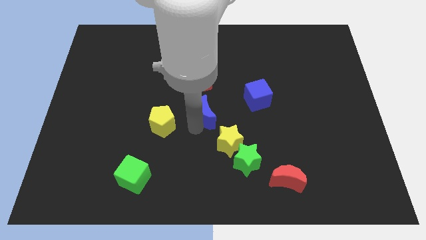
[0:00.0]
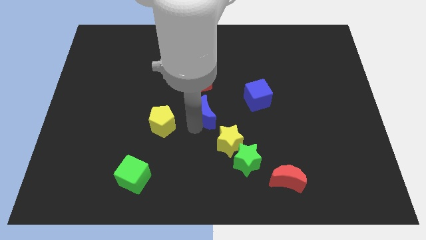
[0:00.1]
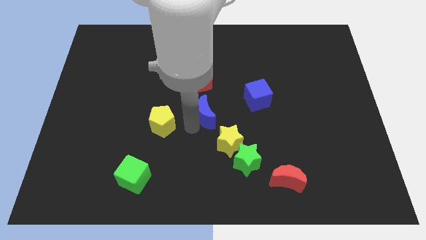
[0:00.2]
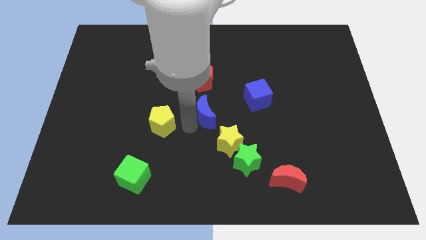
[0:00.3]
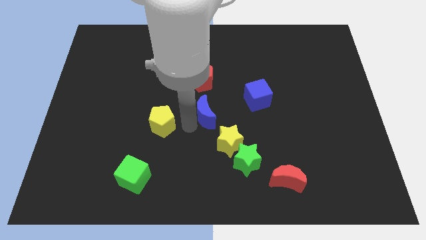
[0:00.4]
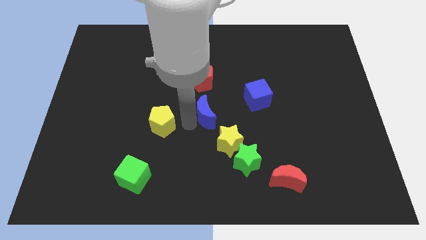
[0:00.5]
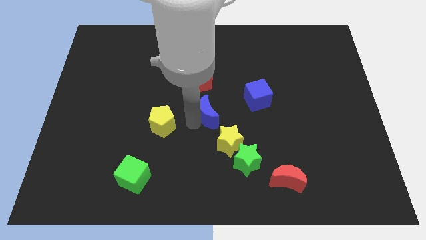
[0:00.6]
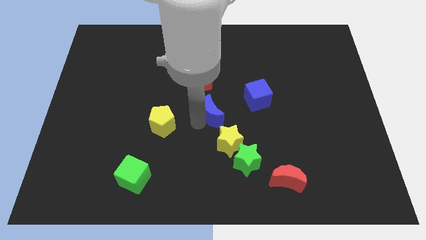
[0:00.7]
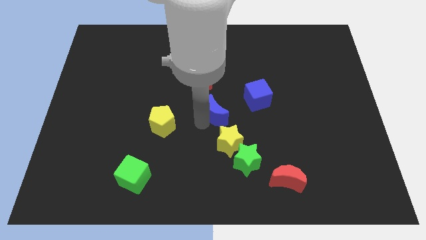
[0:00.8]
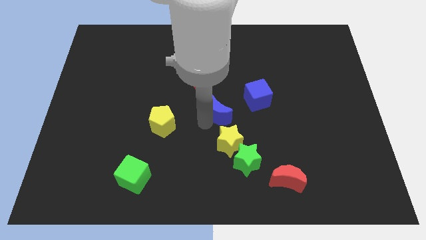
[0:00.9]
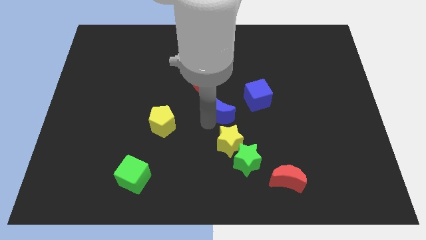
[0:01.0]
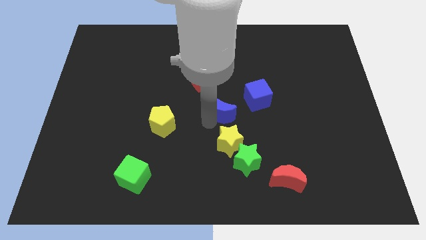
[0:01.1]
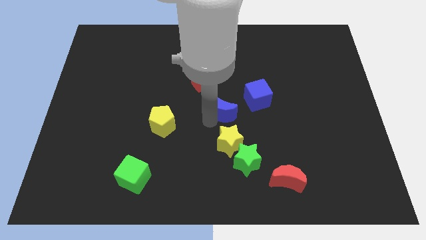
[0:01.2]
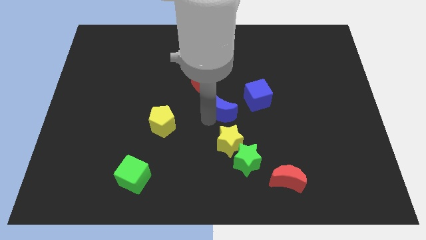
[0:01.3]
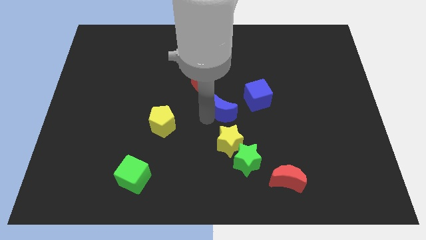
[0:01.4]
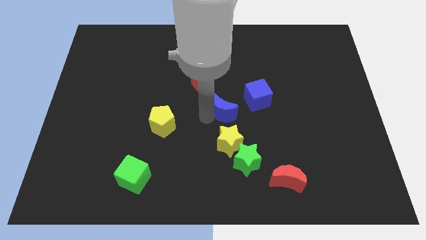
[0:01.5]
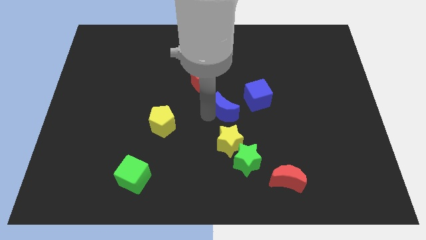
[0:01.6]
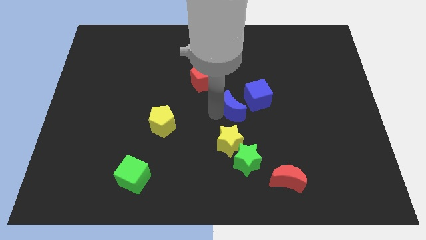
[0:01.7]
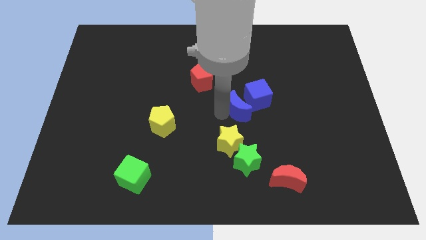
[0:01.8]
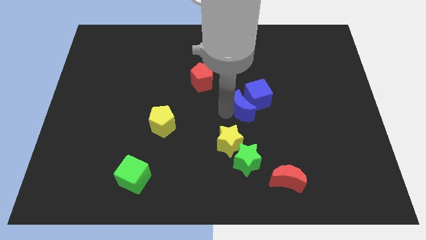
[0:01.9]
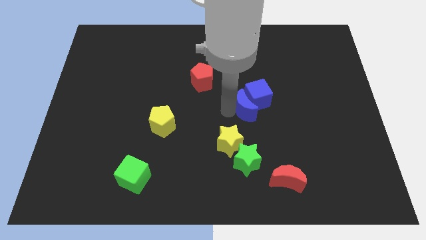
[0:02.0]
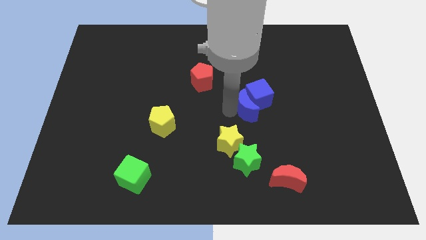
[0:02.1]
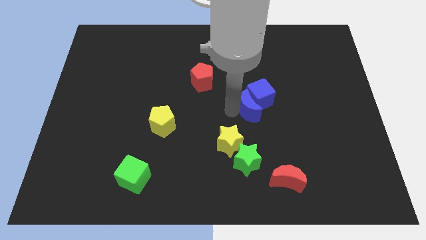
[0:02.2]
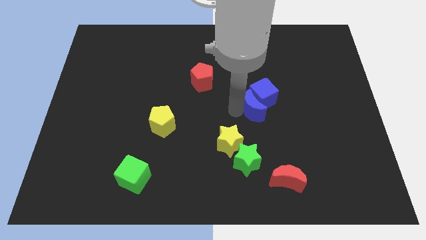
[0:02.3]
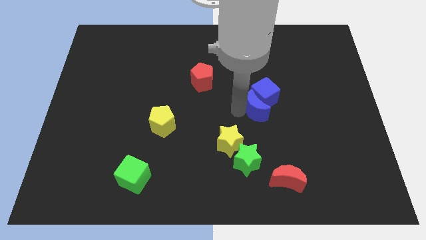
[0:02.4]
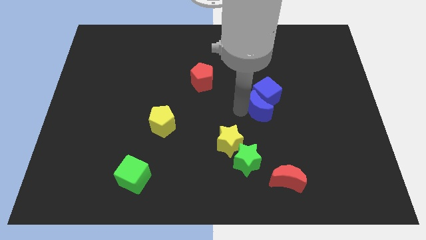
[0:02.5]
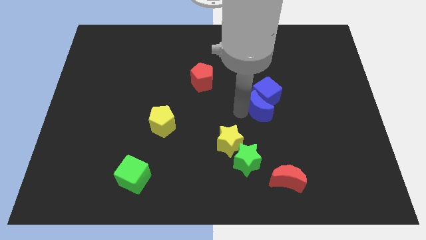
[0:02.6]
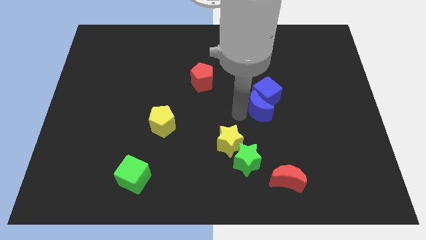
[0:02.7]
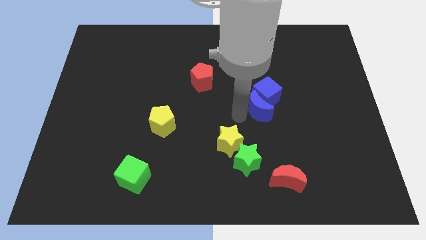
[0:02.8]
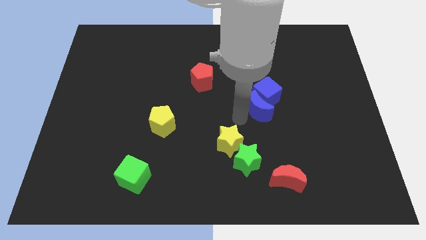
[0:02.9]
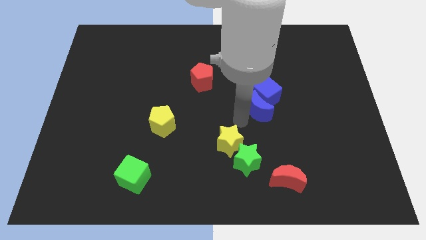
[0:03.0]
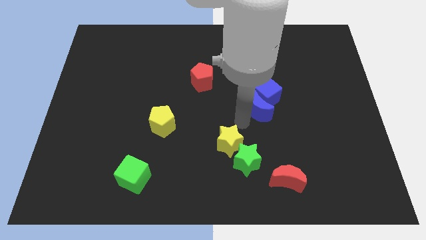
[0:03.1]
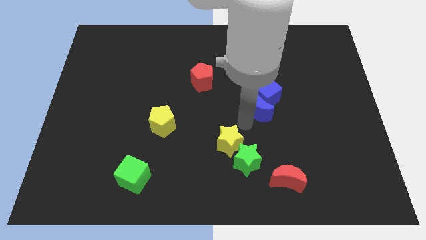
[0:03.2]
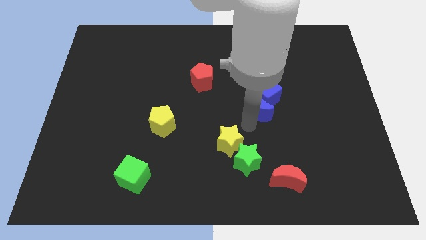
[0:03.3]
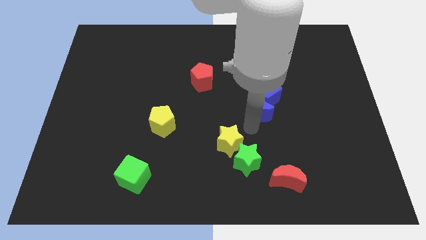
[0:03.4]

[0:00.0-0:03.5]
push the blue crescent into the blue cube

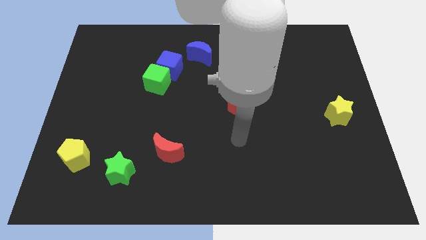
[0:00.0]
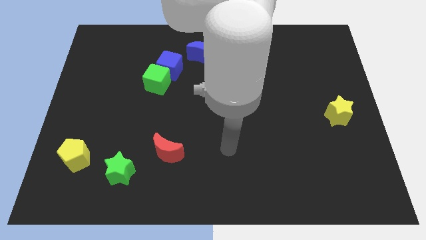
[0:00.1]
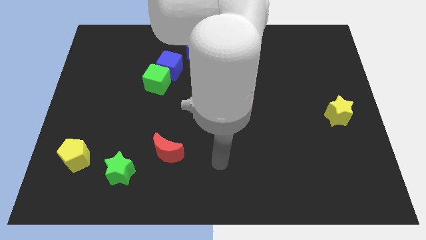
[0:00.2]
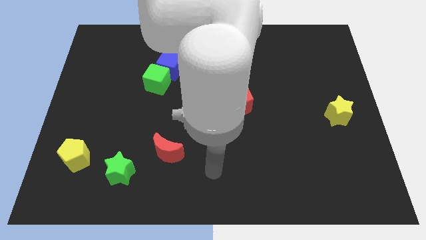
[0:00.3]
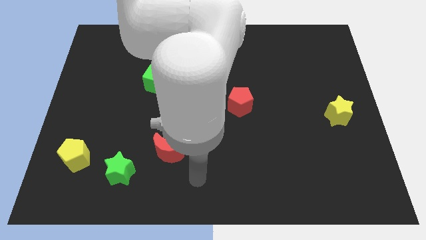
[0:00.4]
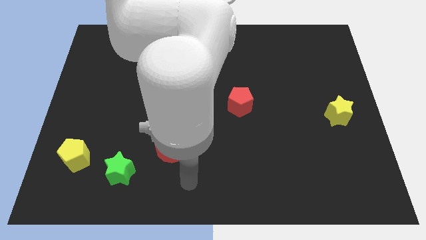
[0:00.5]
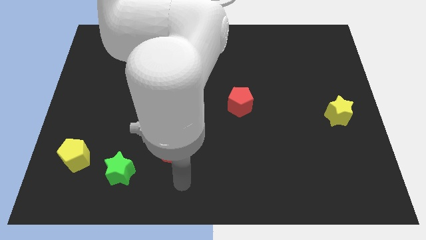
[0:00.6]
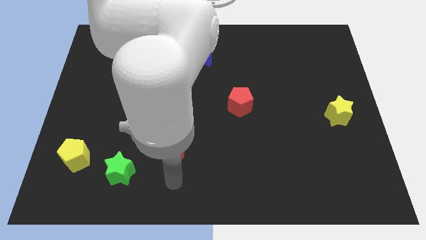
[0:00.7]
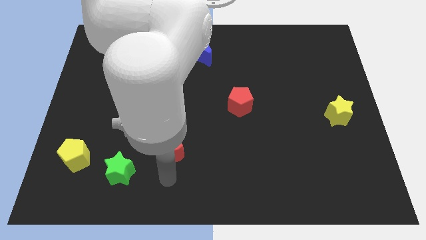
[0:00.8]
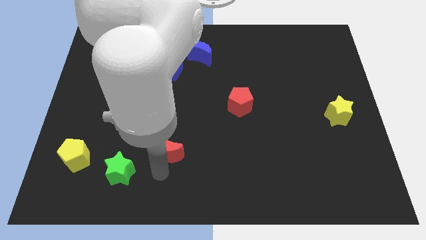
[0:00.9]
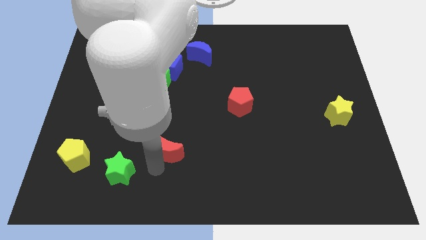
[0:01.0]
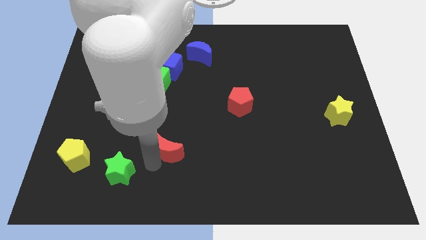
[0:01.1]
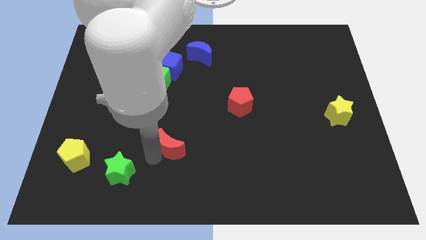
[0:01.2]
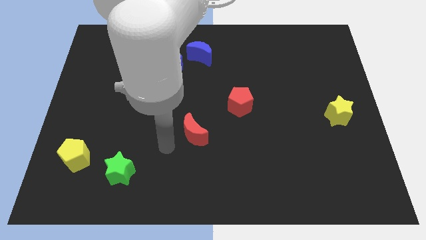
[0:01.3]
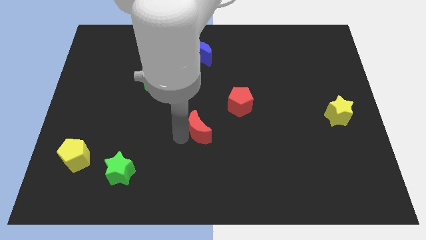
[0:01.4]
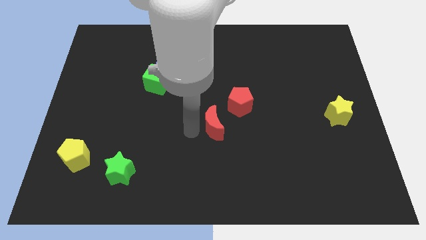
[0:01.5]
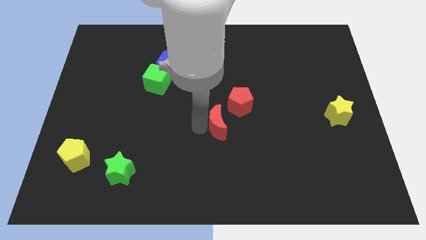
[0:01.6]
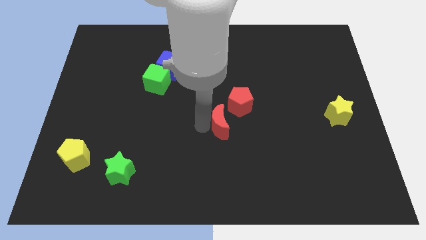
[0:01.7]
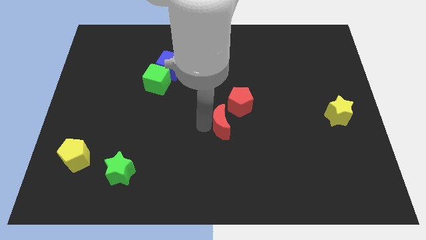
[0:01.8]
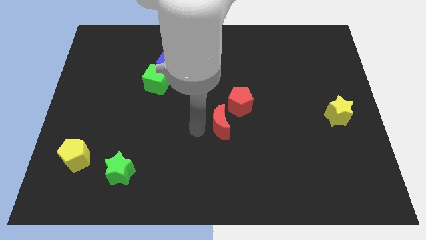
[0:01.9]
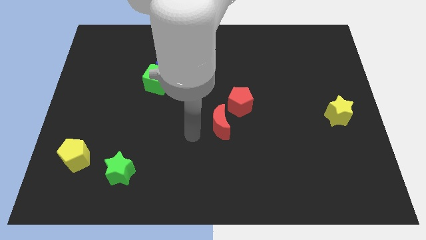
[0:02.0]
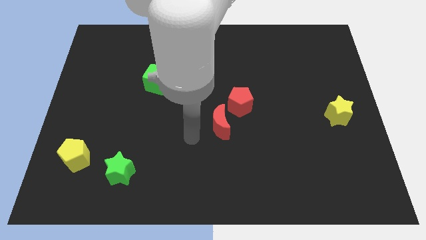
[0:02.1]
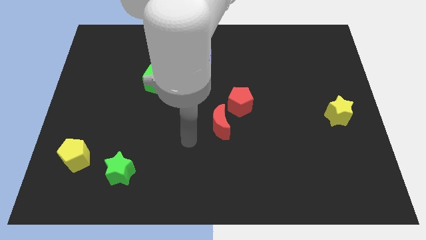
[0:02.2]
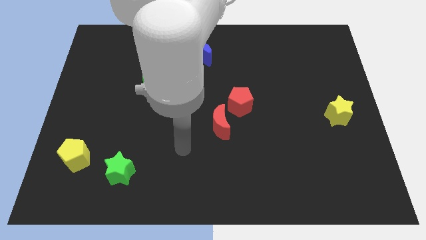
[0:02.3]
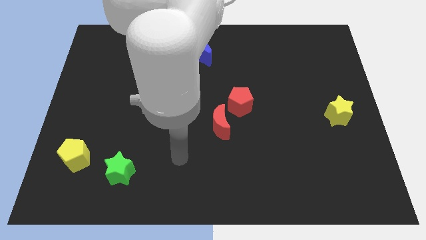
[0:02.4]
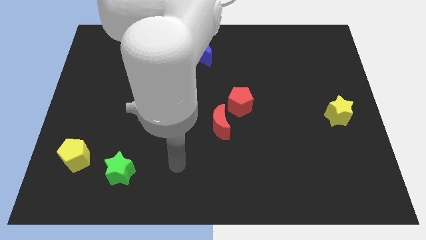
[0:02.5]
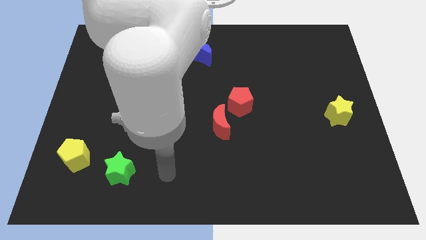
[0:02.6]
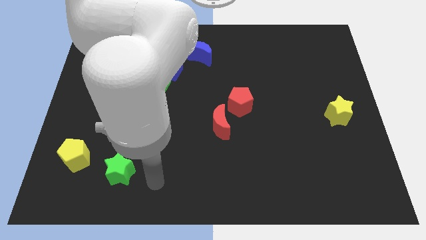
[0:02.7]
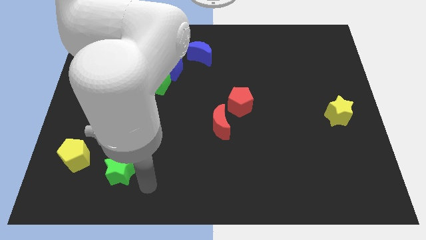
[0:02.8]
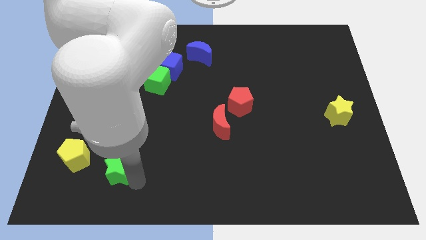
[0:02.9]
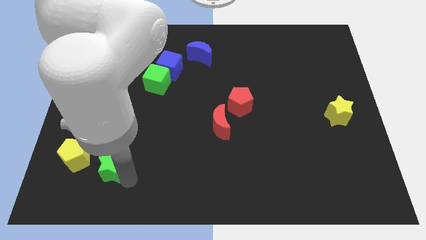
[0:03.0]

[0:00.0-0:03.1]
push the red moon close to the red pentagon

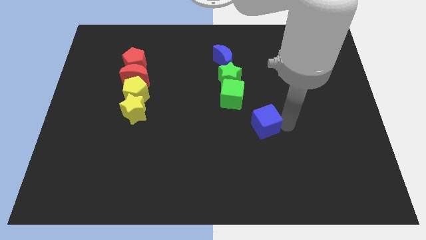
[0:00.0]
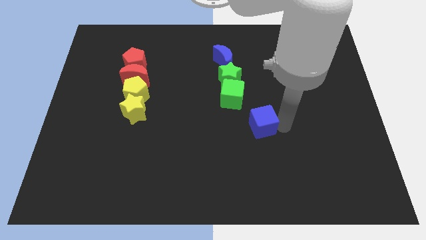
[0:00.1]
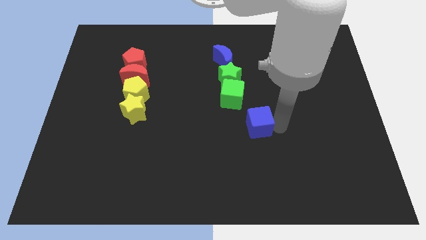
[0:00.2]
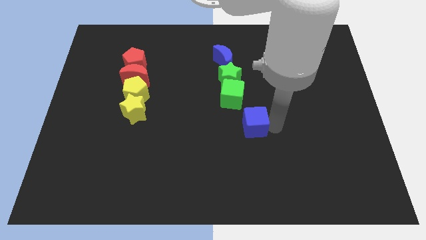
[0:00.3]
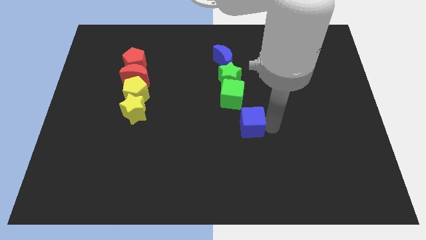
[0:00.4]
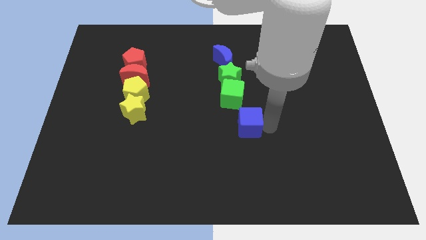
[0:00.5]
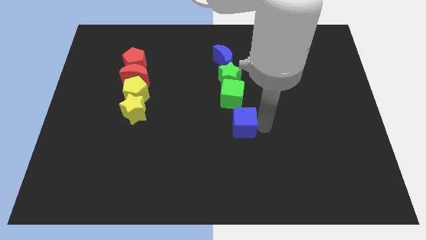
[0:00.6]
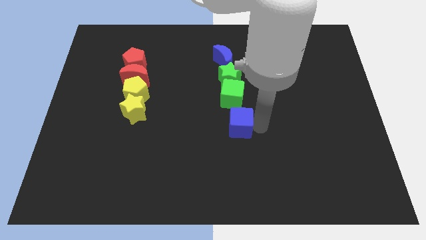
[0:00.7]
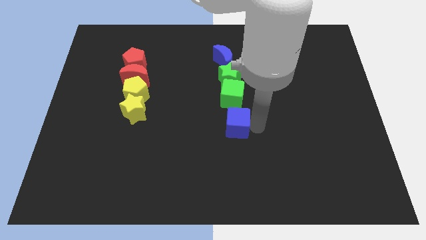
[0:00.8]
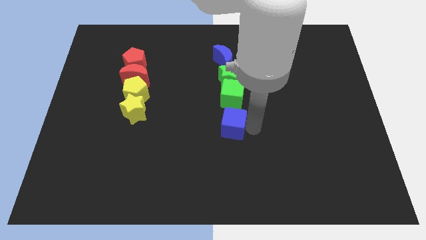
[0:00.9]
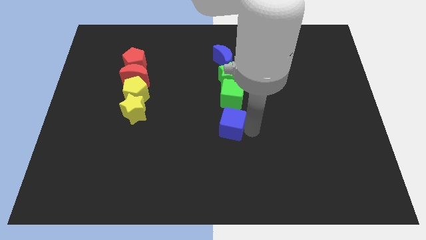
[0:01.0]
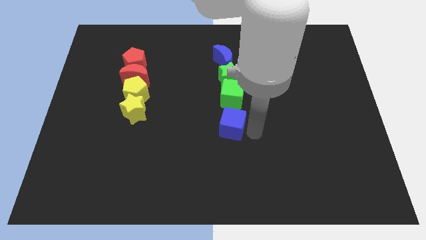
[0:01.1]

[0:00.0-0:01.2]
push the blue cube below the green cube

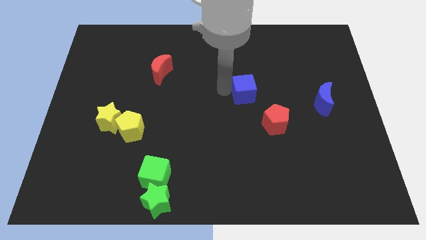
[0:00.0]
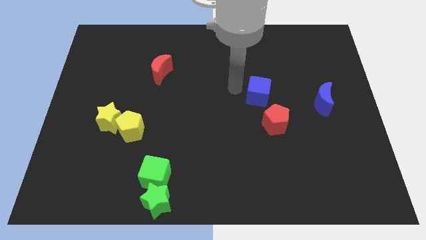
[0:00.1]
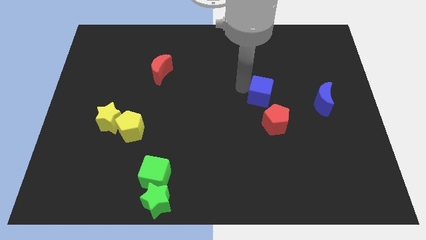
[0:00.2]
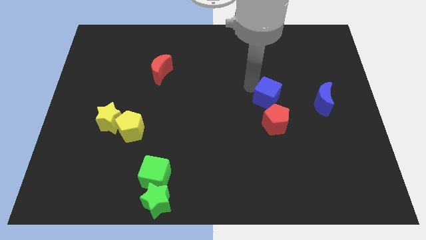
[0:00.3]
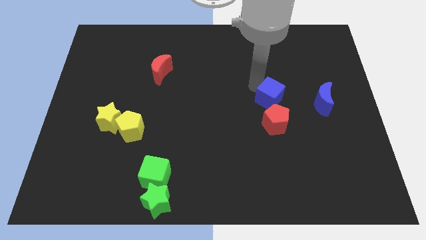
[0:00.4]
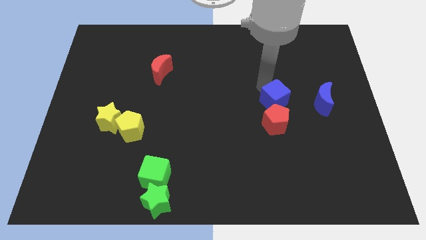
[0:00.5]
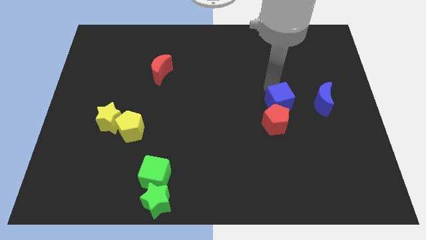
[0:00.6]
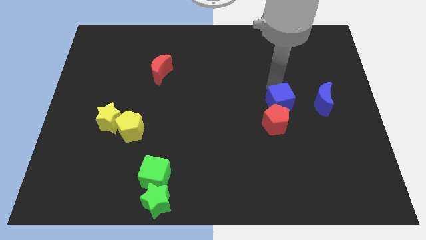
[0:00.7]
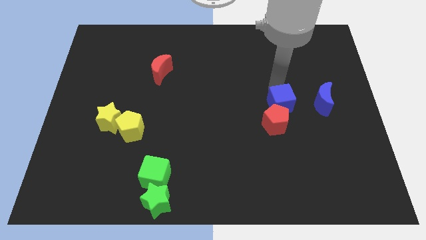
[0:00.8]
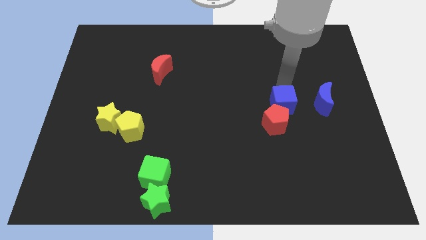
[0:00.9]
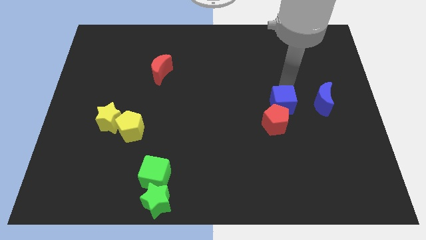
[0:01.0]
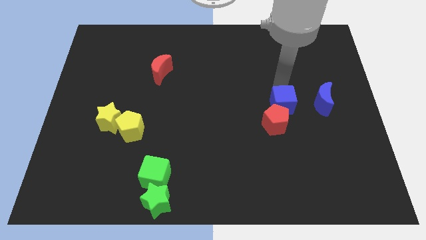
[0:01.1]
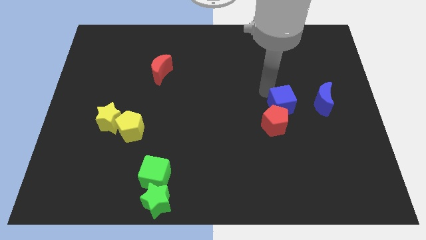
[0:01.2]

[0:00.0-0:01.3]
push the blue cube into the red pentagone
